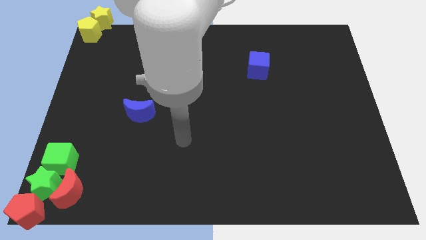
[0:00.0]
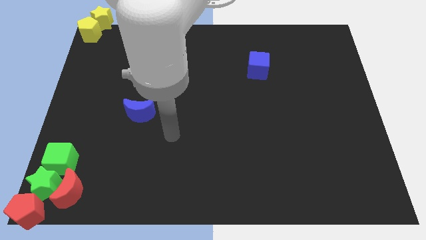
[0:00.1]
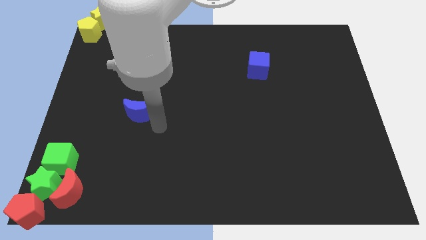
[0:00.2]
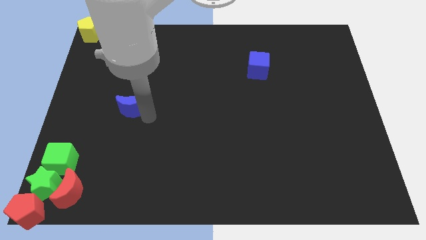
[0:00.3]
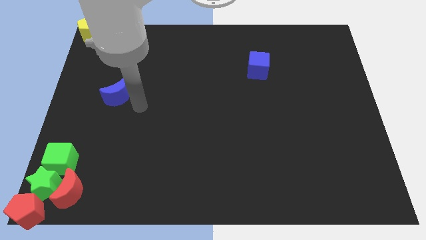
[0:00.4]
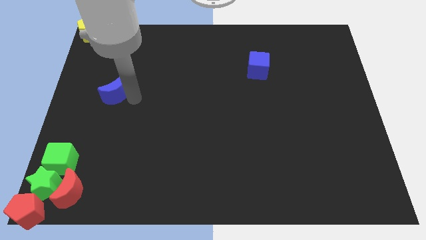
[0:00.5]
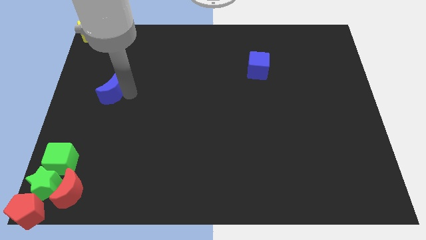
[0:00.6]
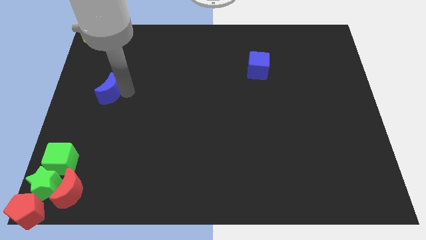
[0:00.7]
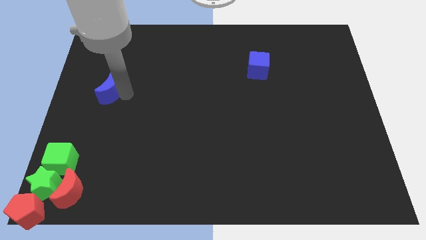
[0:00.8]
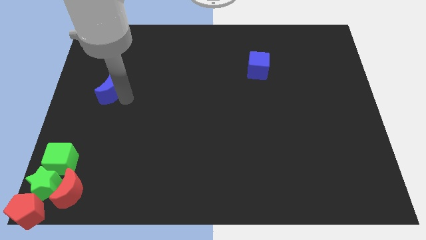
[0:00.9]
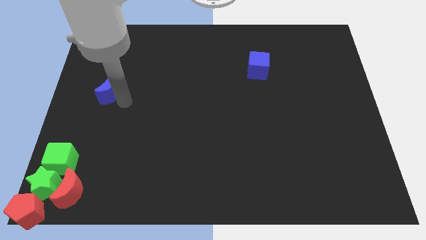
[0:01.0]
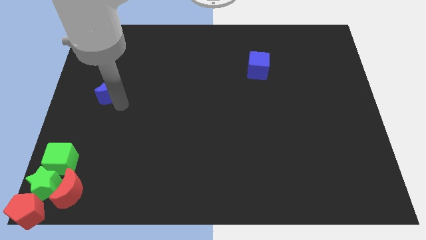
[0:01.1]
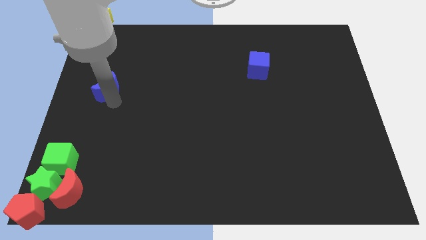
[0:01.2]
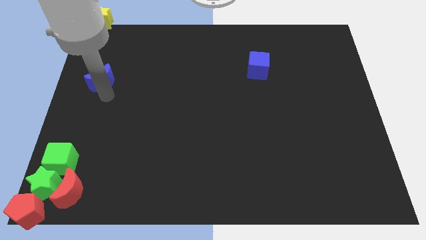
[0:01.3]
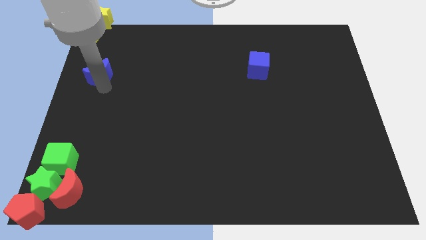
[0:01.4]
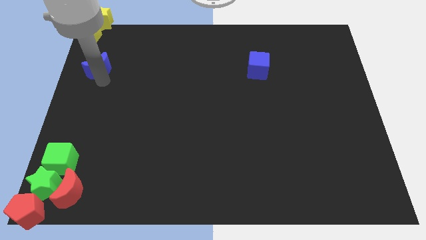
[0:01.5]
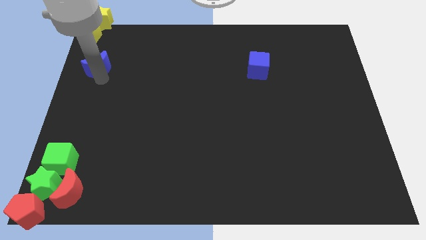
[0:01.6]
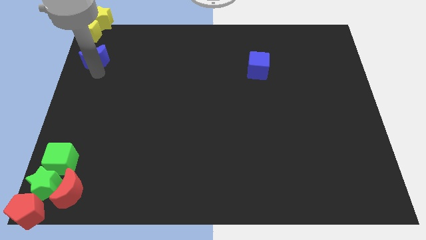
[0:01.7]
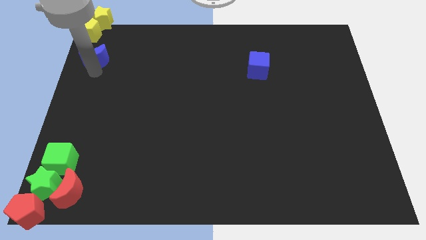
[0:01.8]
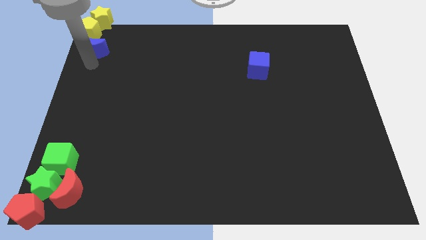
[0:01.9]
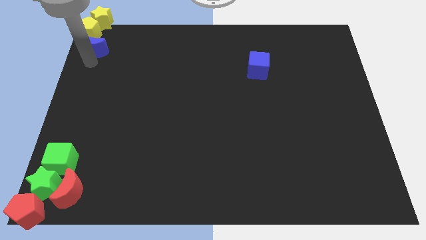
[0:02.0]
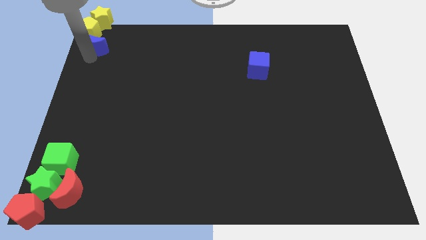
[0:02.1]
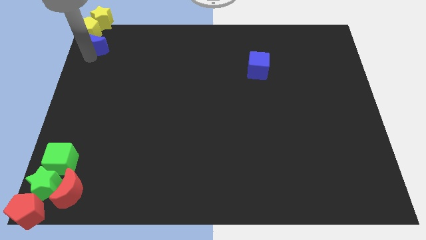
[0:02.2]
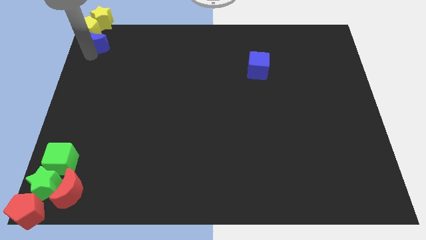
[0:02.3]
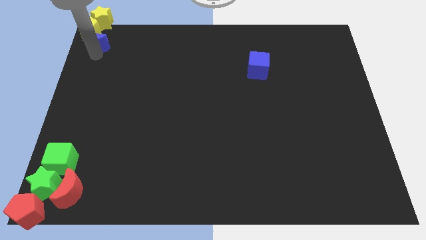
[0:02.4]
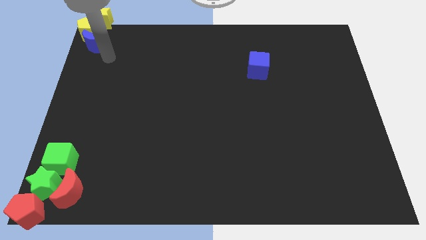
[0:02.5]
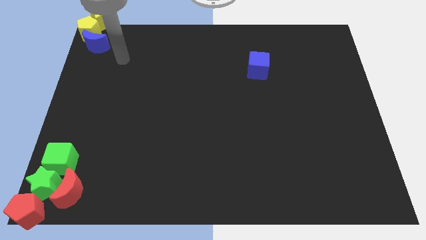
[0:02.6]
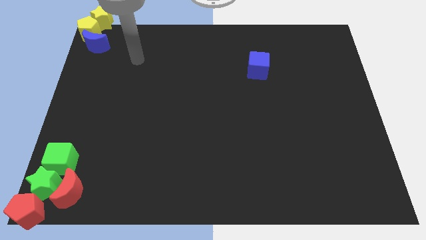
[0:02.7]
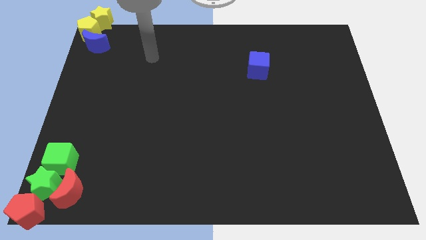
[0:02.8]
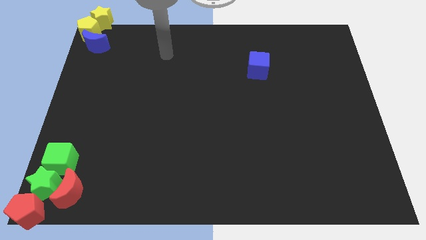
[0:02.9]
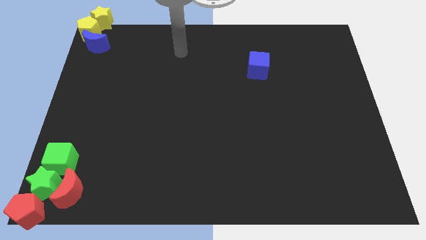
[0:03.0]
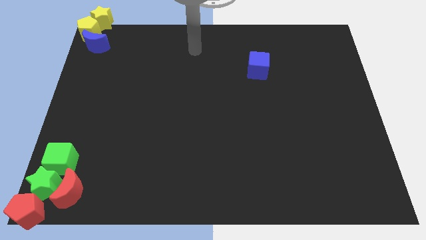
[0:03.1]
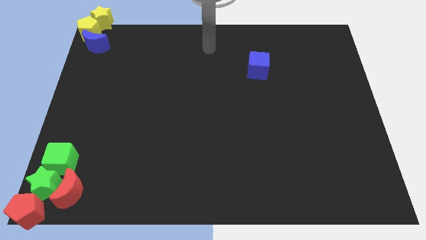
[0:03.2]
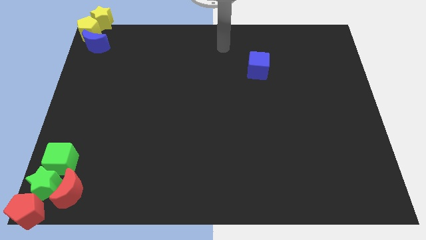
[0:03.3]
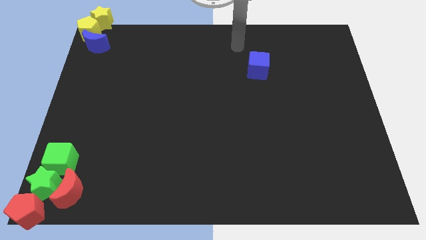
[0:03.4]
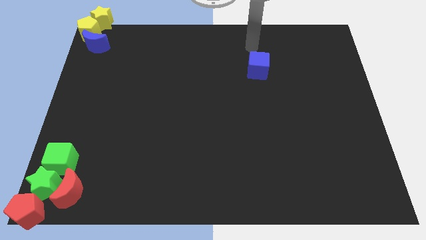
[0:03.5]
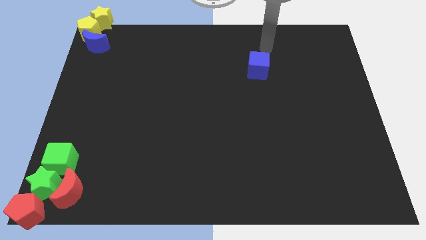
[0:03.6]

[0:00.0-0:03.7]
push the blue crescent towards the bottom of the yellow pentagon

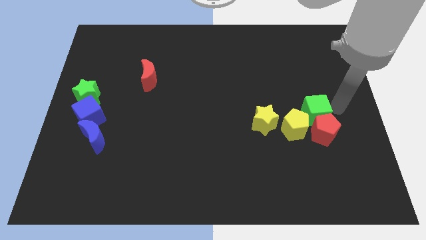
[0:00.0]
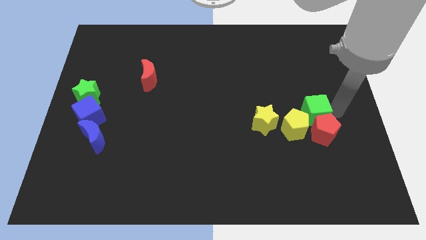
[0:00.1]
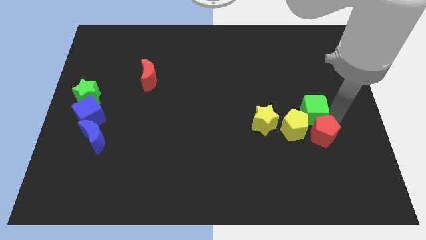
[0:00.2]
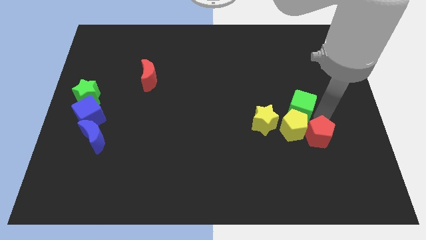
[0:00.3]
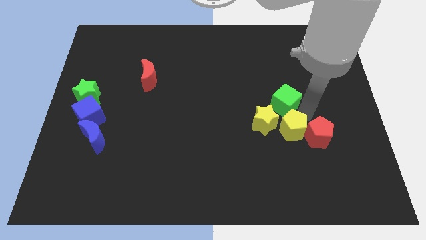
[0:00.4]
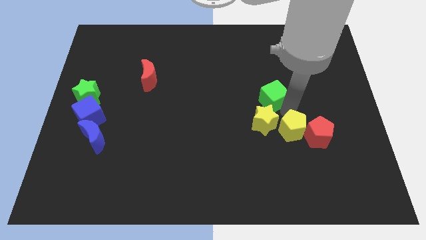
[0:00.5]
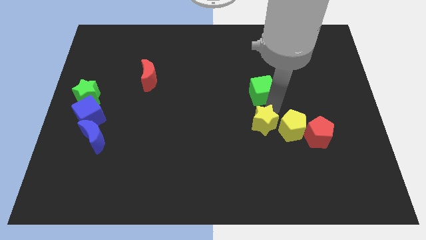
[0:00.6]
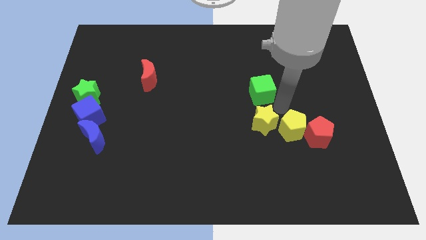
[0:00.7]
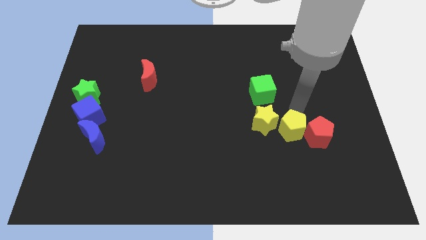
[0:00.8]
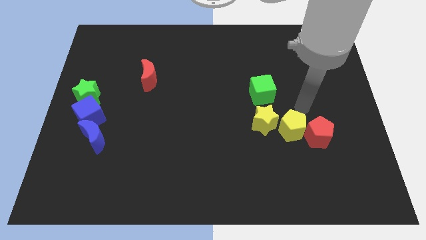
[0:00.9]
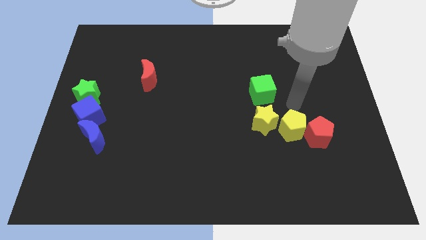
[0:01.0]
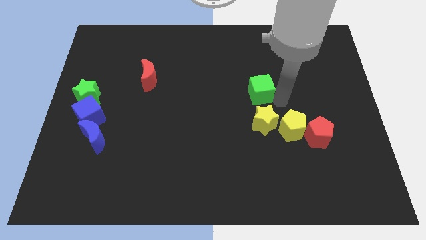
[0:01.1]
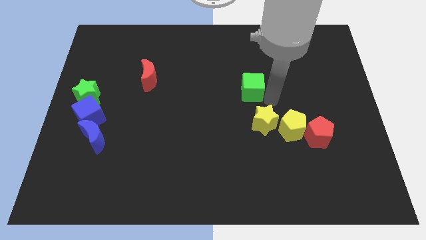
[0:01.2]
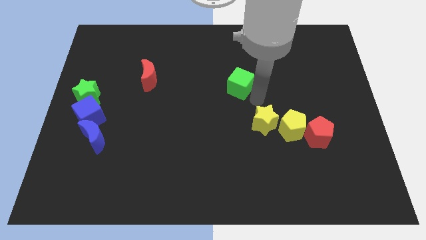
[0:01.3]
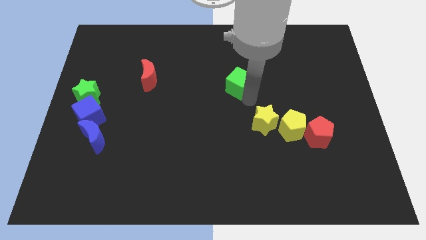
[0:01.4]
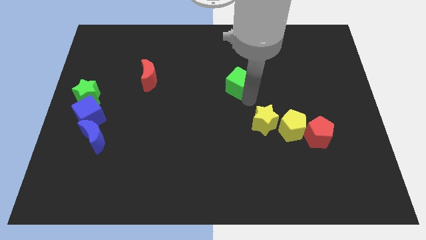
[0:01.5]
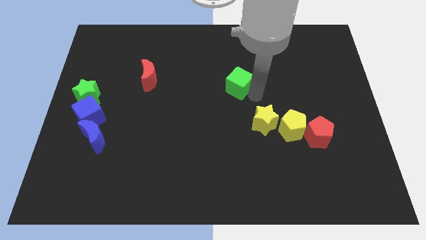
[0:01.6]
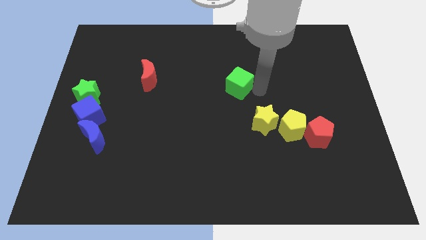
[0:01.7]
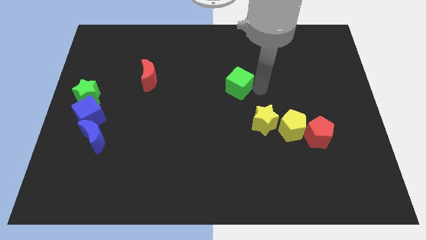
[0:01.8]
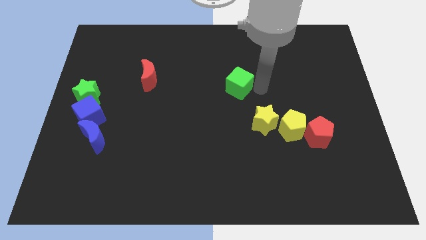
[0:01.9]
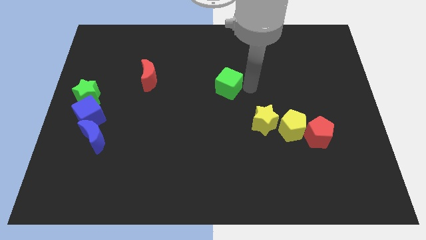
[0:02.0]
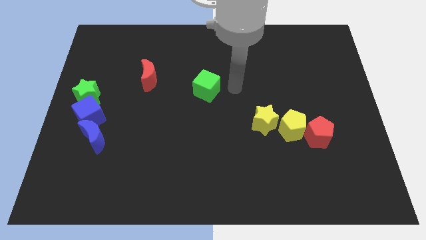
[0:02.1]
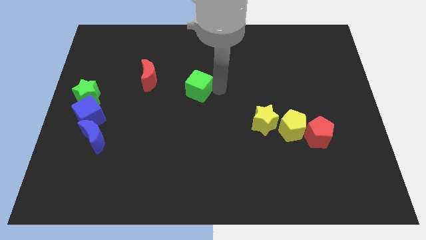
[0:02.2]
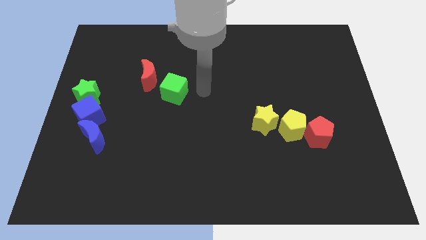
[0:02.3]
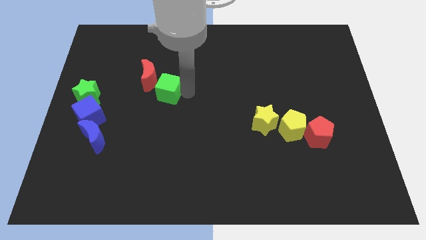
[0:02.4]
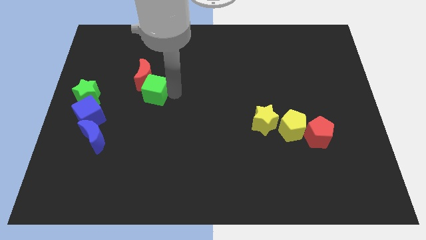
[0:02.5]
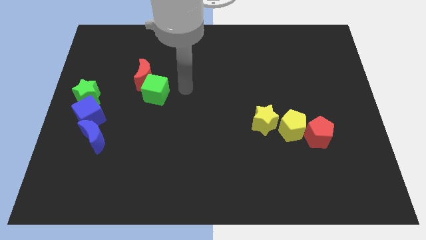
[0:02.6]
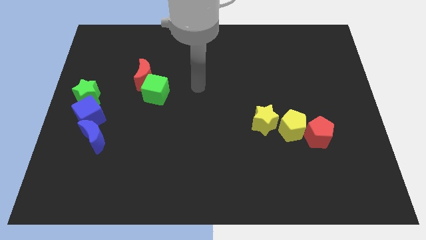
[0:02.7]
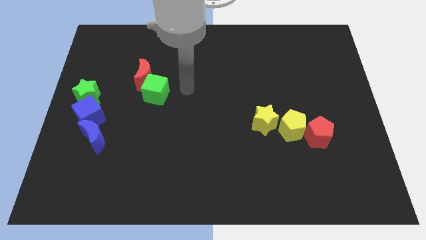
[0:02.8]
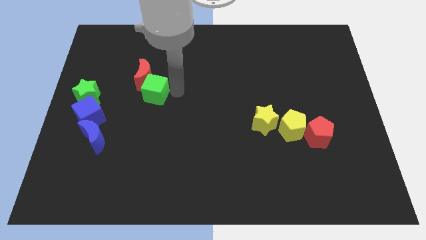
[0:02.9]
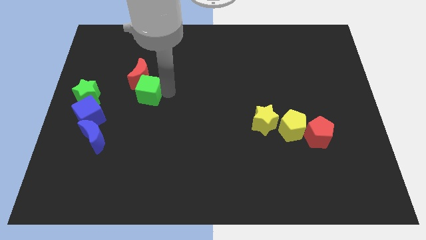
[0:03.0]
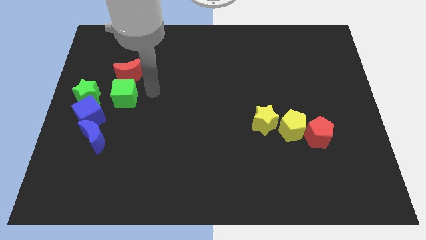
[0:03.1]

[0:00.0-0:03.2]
move the green cube to the right of the red moon

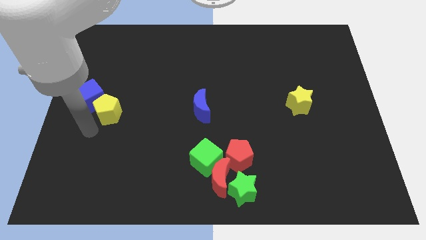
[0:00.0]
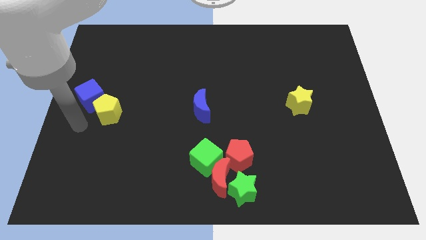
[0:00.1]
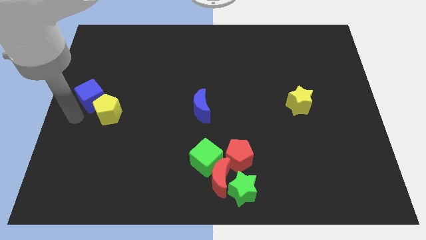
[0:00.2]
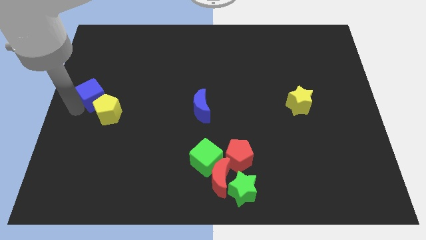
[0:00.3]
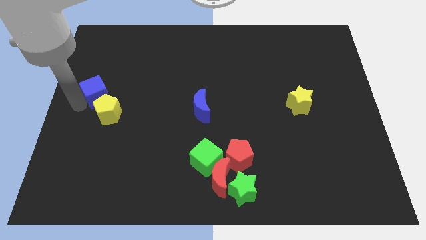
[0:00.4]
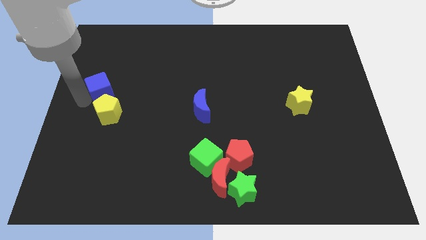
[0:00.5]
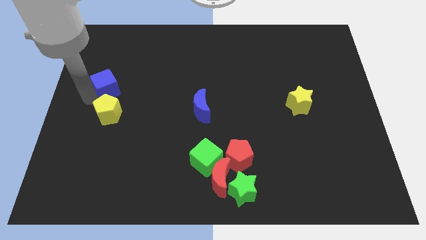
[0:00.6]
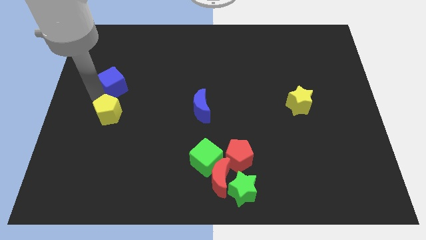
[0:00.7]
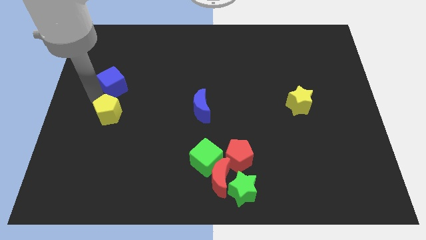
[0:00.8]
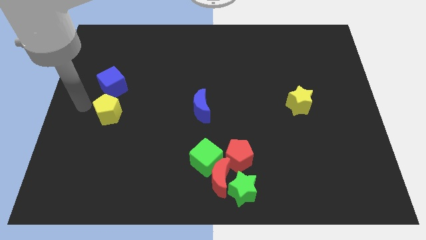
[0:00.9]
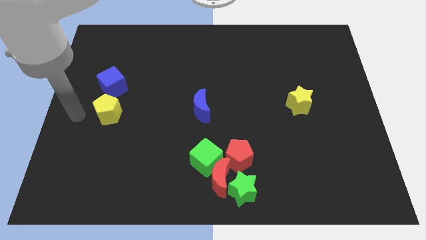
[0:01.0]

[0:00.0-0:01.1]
move blue cube above yellow pentagon

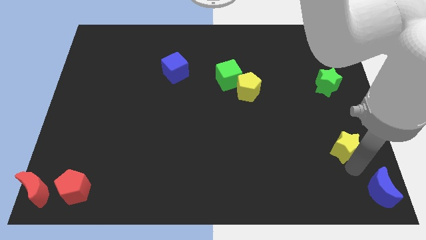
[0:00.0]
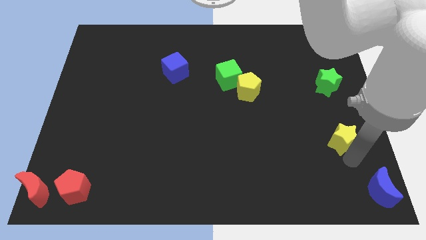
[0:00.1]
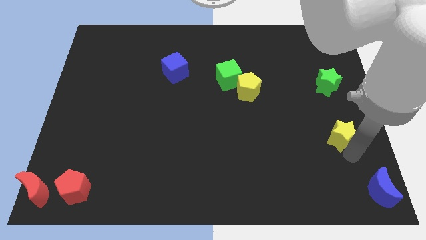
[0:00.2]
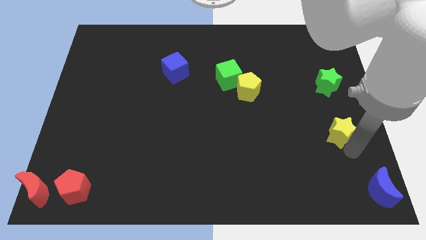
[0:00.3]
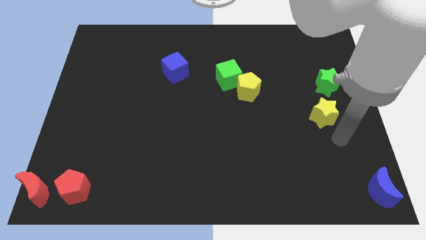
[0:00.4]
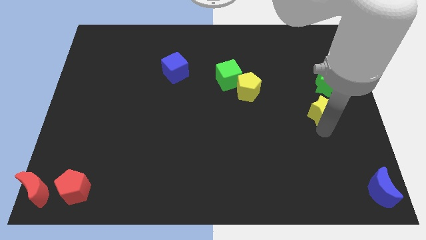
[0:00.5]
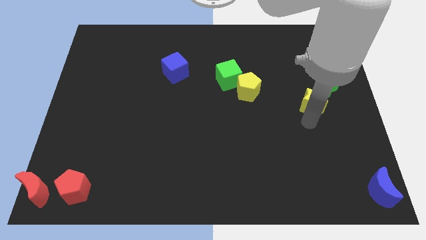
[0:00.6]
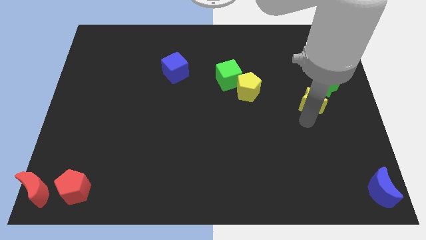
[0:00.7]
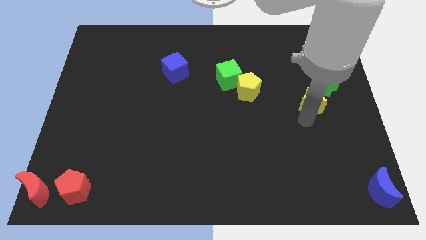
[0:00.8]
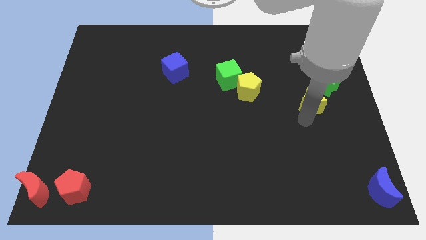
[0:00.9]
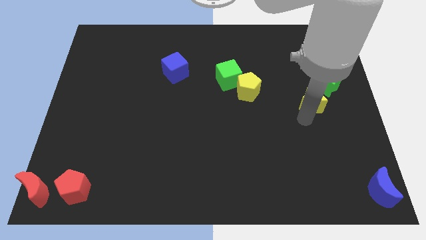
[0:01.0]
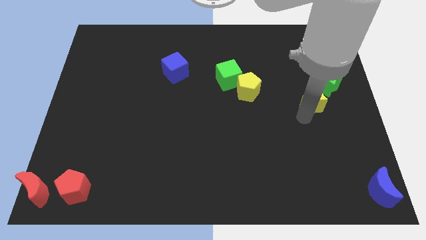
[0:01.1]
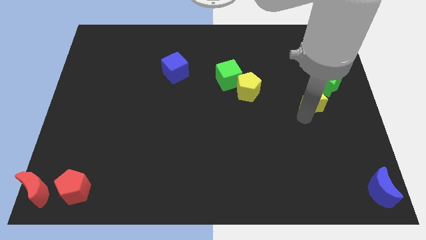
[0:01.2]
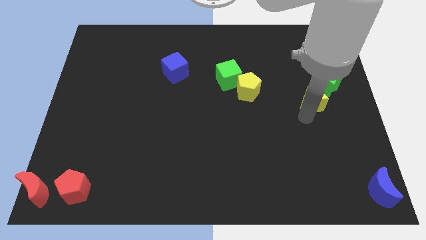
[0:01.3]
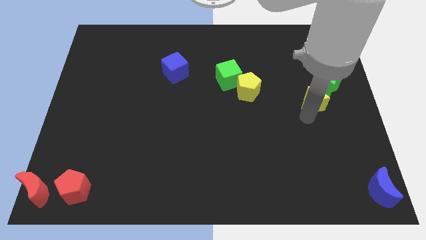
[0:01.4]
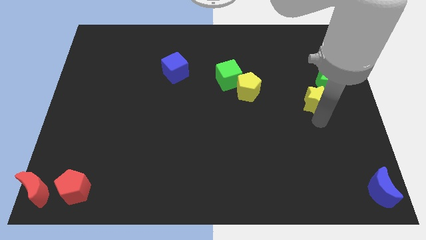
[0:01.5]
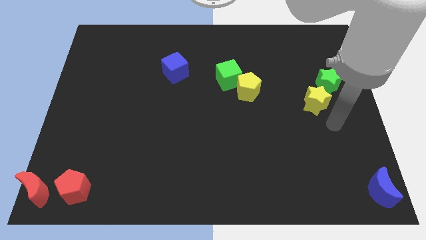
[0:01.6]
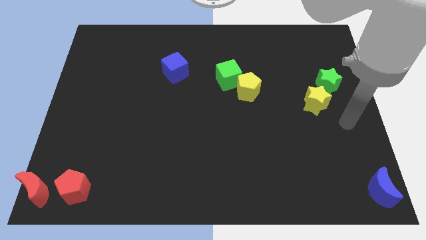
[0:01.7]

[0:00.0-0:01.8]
move the yellow star to the bottom of the green star
